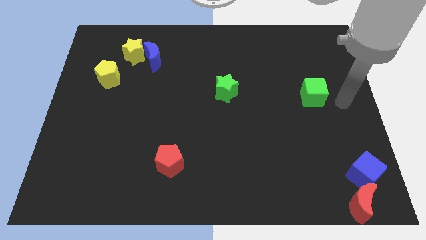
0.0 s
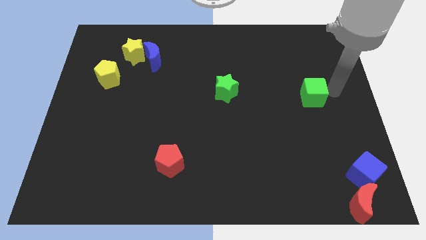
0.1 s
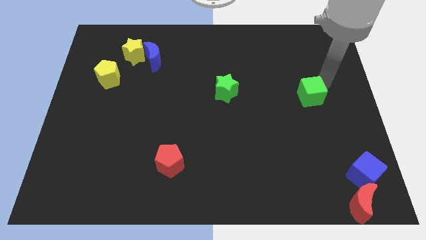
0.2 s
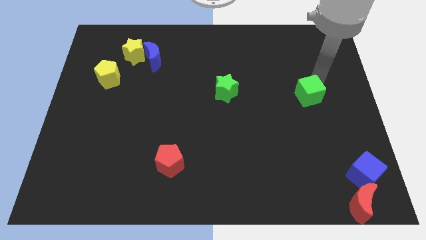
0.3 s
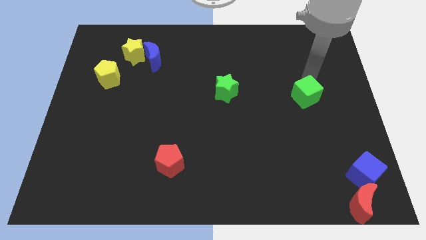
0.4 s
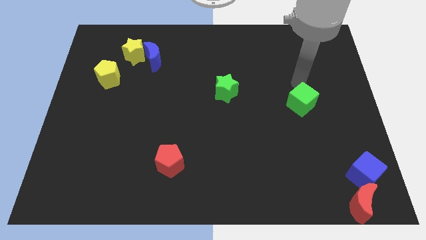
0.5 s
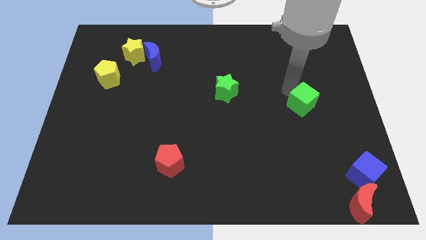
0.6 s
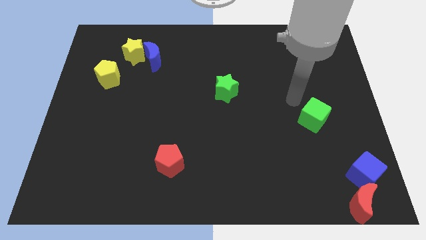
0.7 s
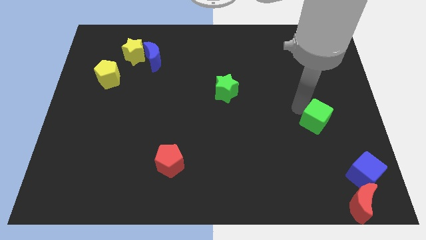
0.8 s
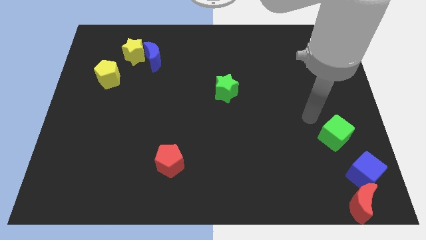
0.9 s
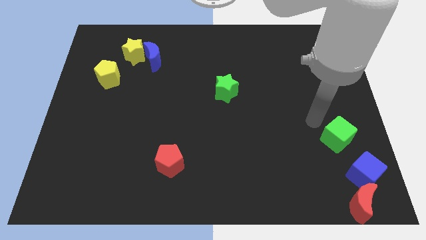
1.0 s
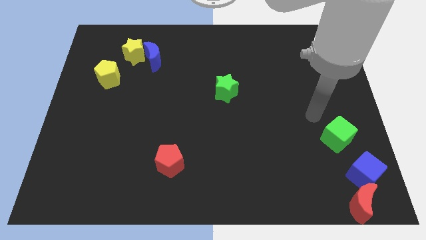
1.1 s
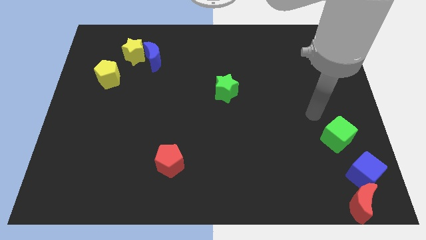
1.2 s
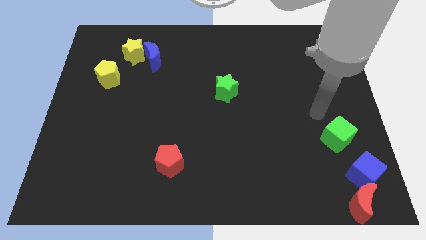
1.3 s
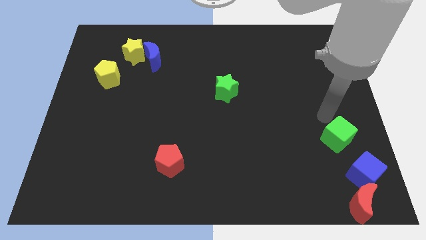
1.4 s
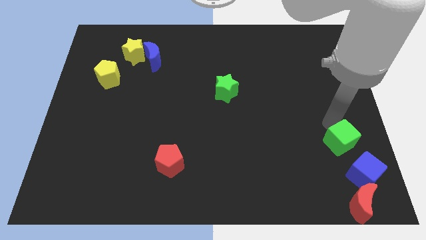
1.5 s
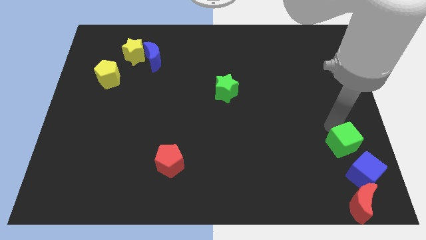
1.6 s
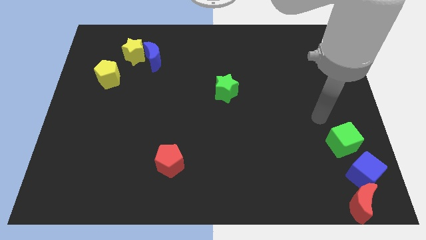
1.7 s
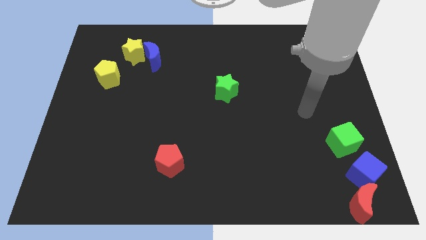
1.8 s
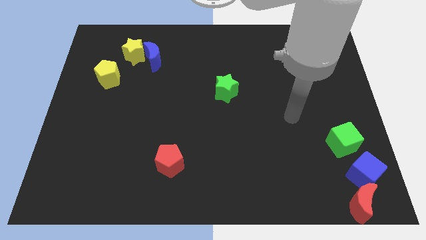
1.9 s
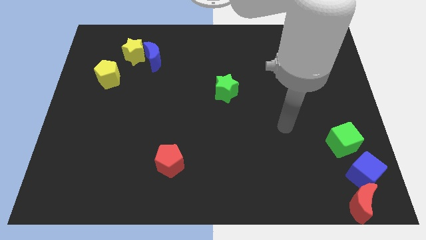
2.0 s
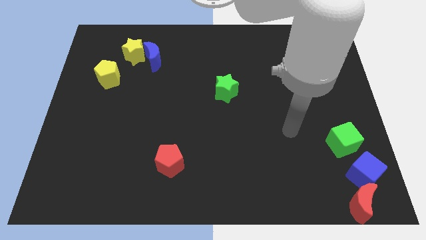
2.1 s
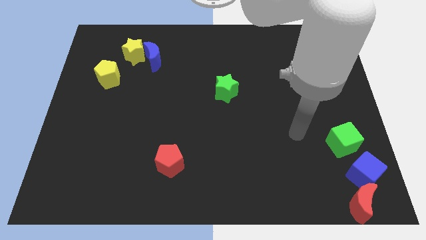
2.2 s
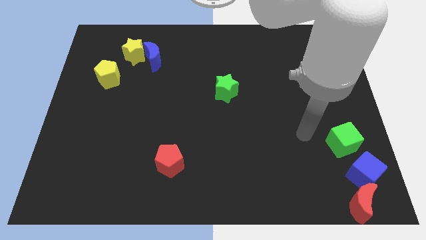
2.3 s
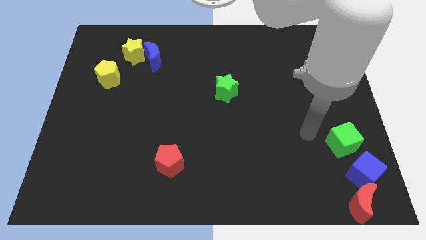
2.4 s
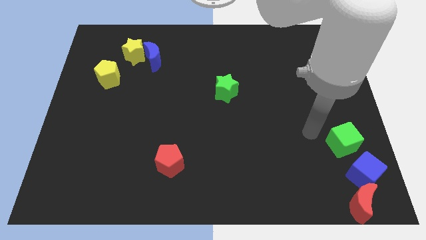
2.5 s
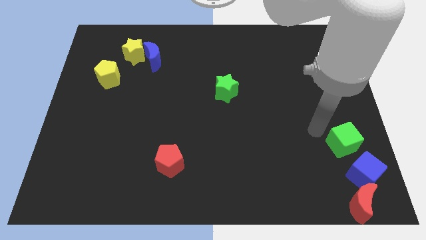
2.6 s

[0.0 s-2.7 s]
move the green cube towards the blue cube

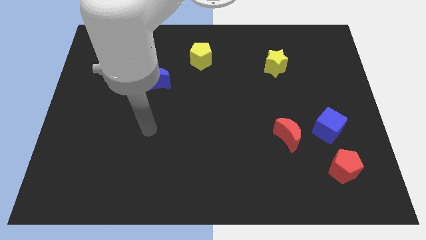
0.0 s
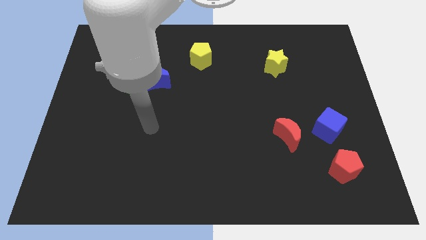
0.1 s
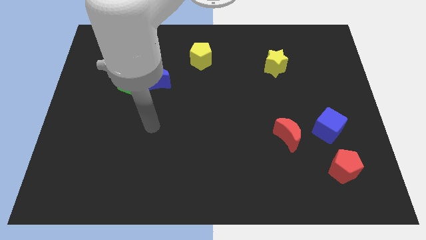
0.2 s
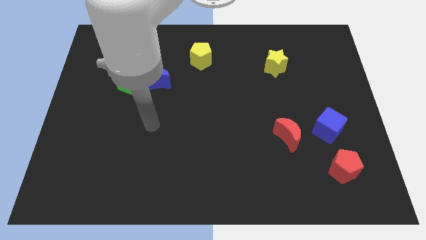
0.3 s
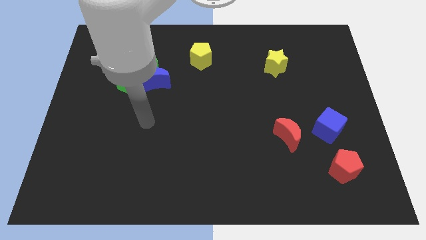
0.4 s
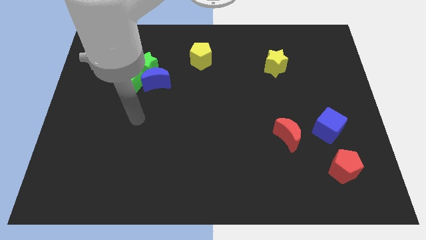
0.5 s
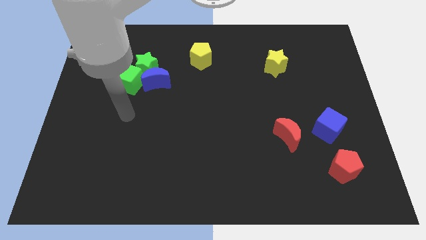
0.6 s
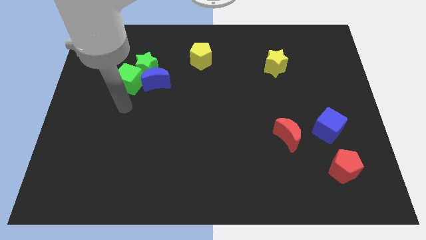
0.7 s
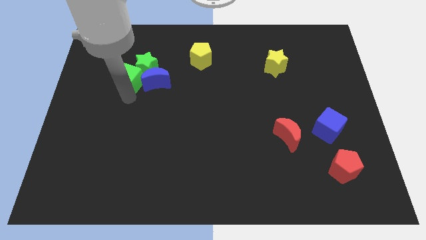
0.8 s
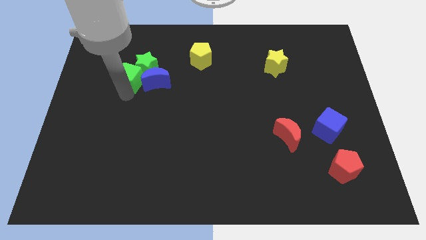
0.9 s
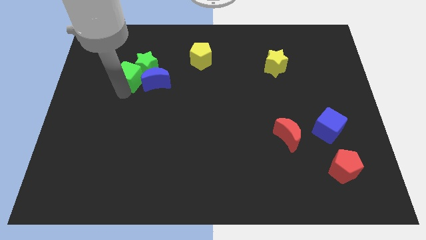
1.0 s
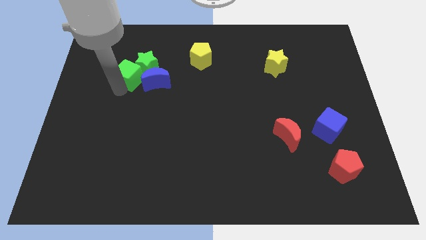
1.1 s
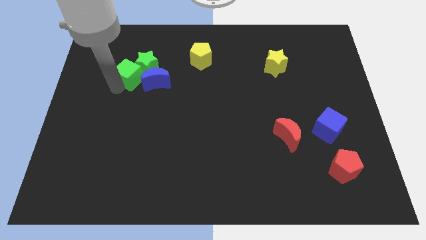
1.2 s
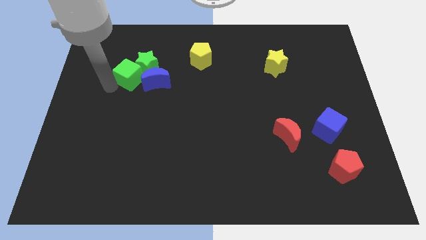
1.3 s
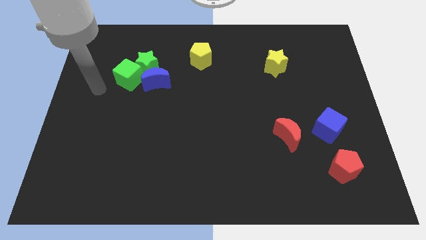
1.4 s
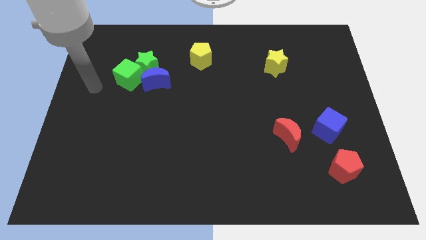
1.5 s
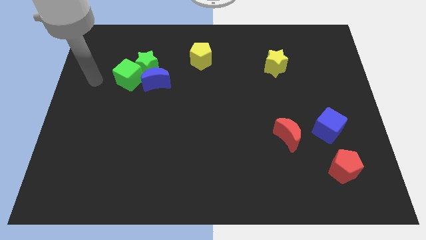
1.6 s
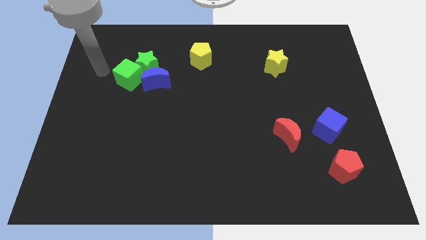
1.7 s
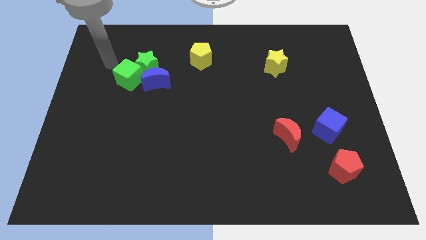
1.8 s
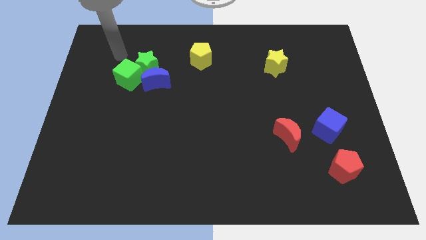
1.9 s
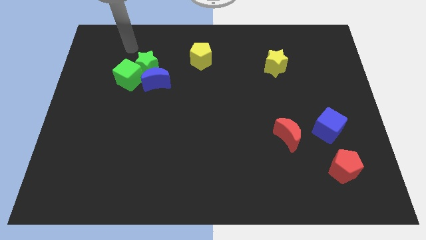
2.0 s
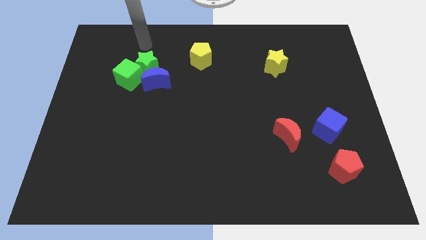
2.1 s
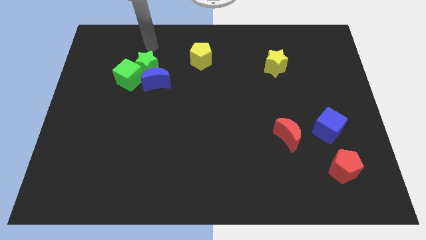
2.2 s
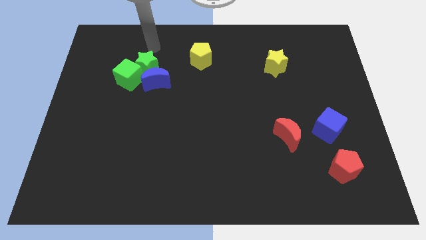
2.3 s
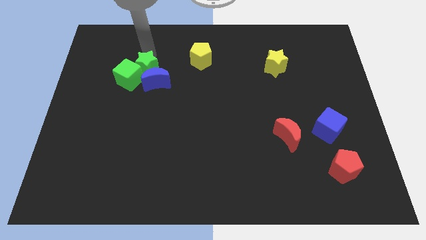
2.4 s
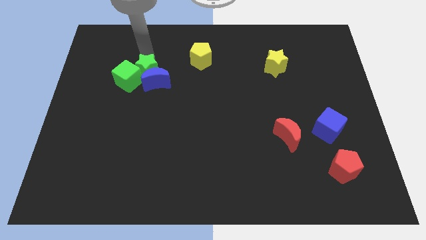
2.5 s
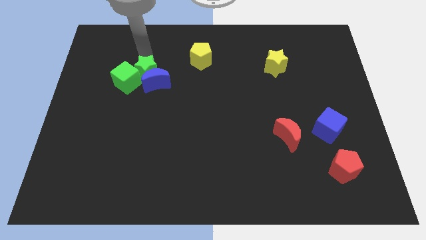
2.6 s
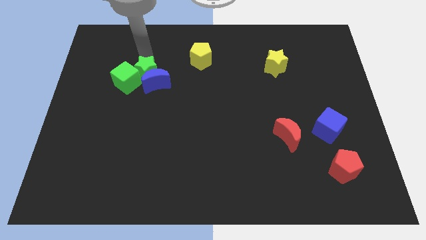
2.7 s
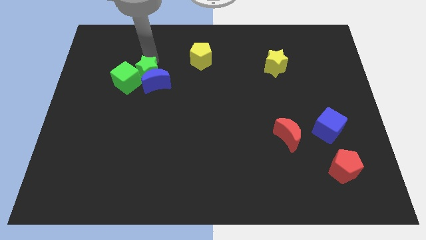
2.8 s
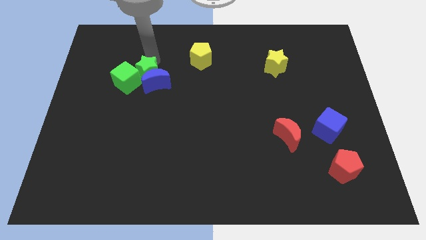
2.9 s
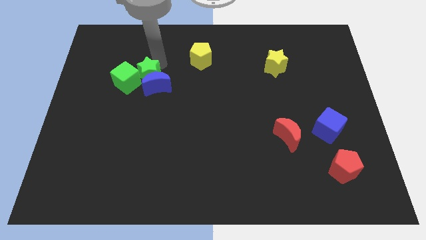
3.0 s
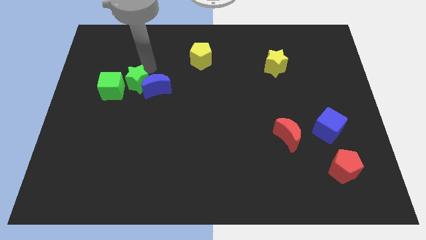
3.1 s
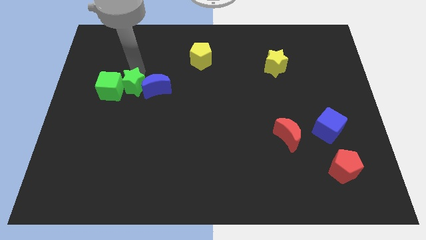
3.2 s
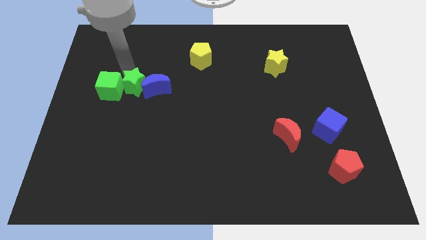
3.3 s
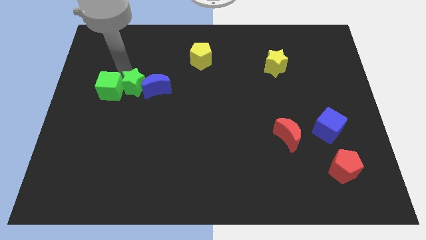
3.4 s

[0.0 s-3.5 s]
make the green star in between green cube and blue crescent

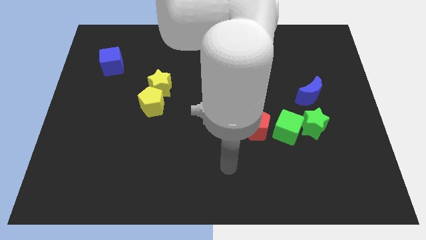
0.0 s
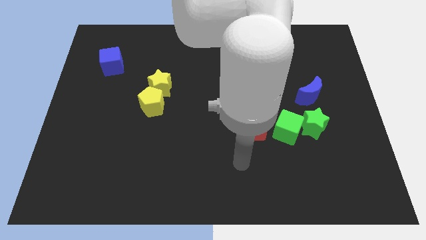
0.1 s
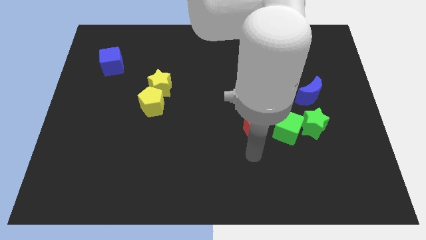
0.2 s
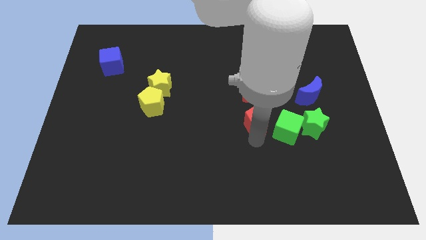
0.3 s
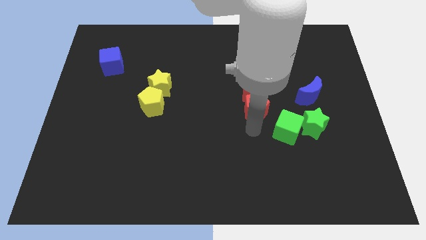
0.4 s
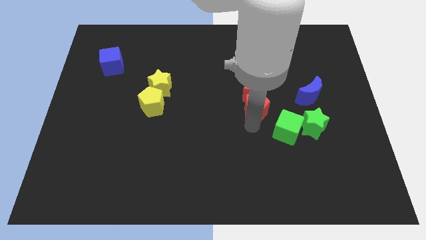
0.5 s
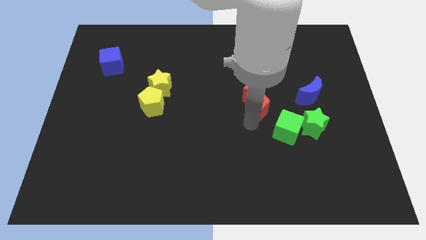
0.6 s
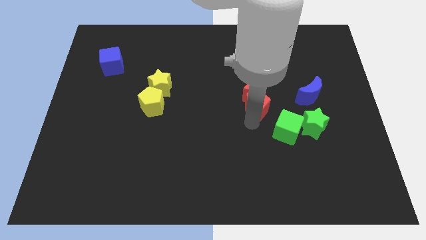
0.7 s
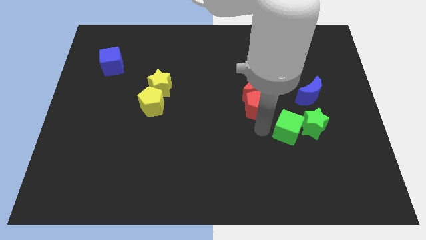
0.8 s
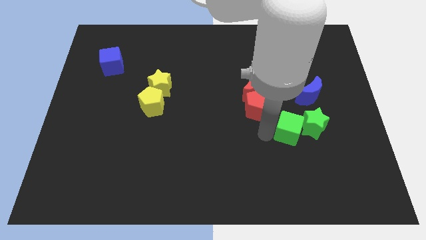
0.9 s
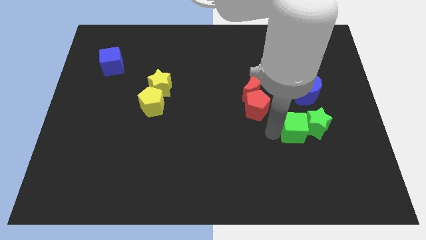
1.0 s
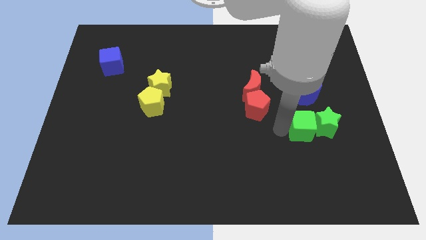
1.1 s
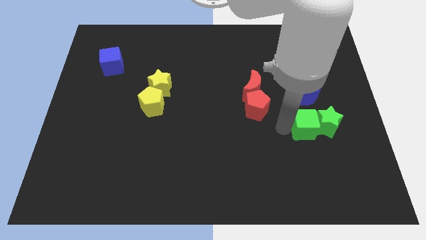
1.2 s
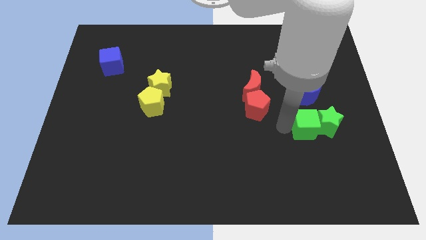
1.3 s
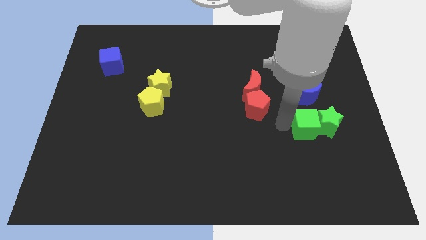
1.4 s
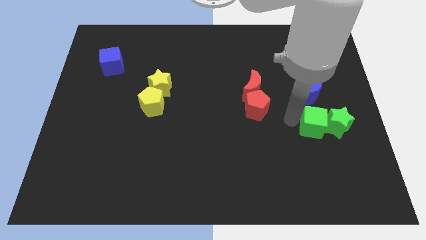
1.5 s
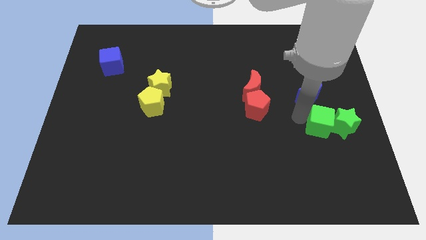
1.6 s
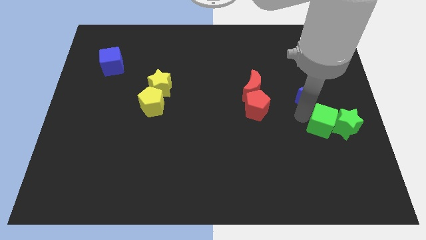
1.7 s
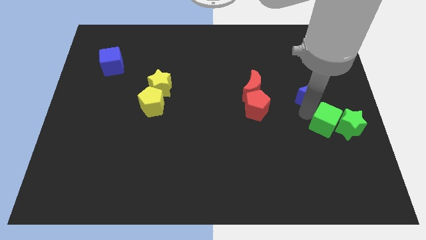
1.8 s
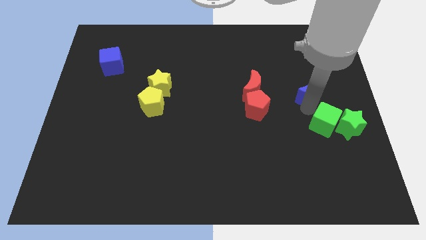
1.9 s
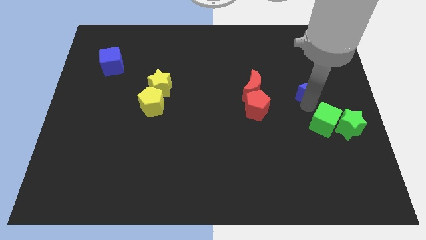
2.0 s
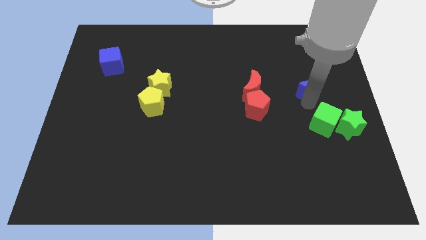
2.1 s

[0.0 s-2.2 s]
move the green blocks towards the right

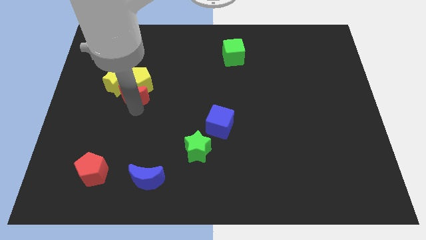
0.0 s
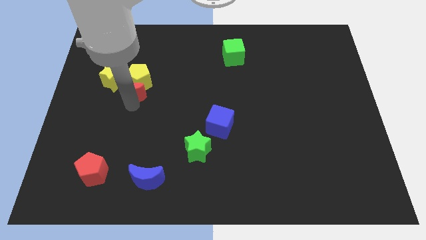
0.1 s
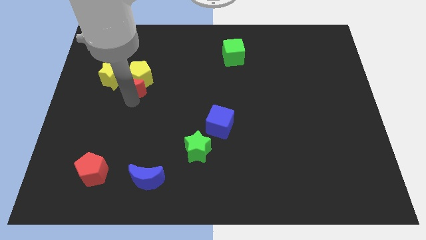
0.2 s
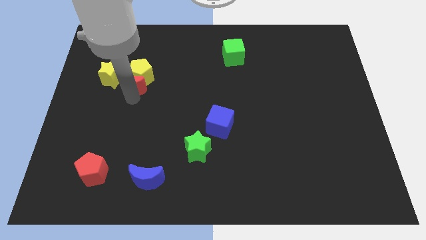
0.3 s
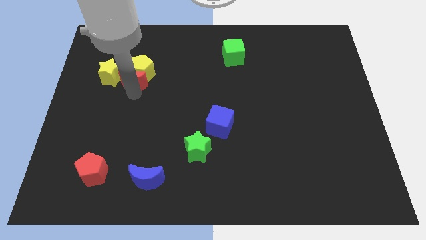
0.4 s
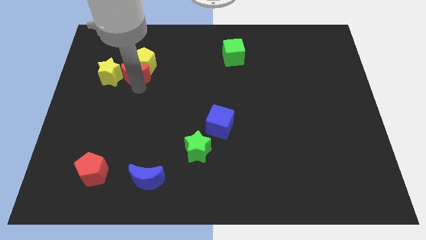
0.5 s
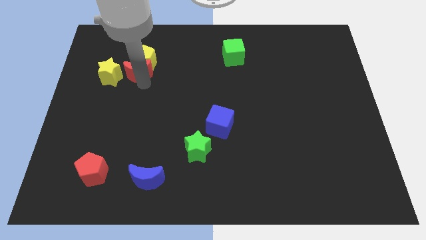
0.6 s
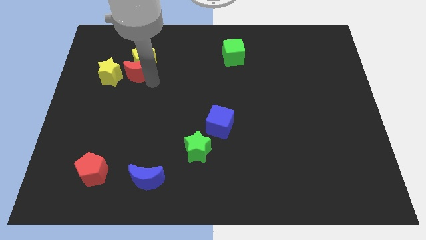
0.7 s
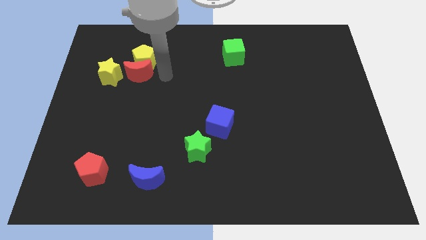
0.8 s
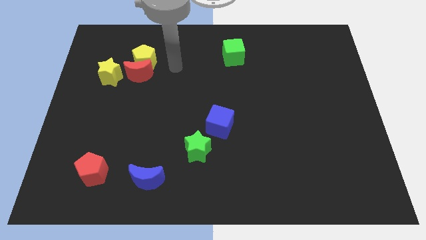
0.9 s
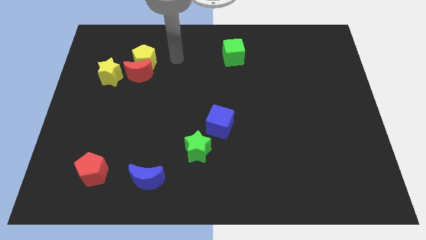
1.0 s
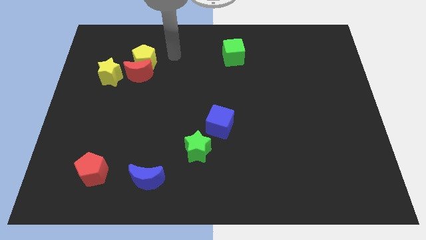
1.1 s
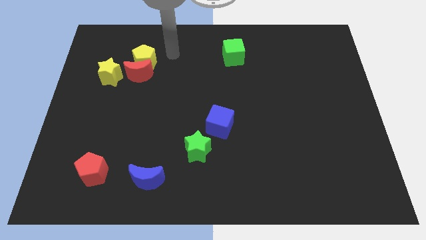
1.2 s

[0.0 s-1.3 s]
move the red moon along with the yellow pentagon slightly towards up
